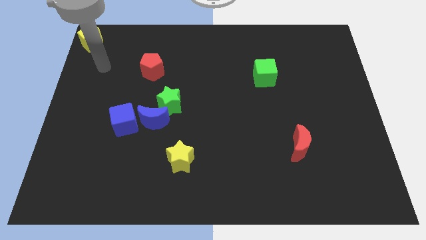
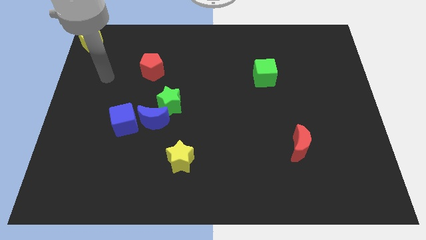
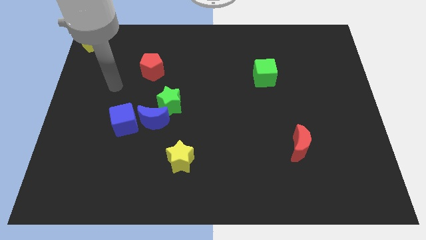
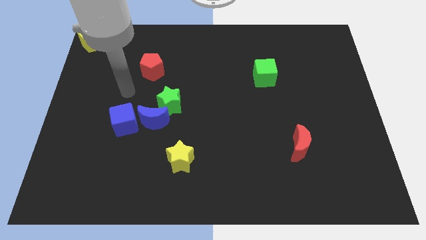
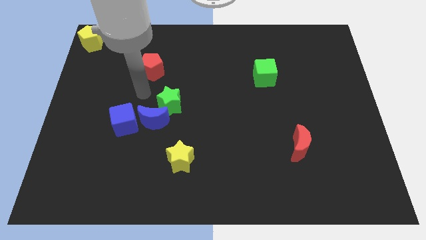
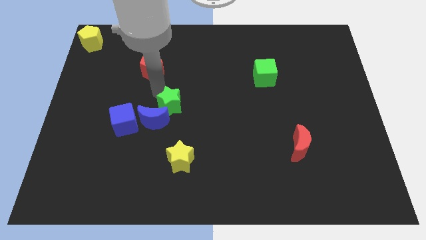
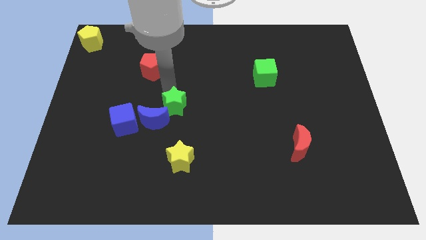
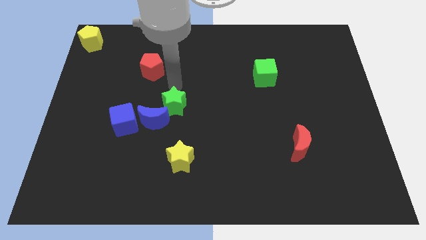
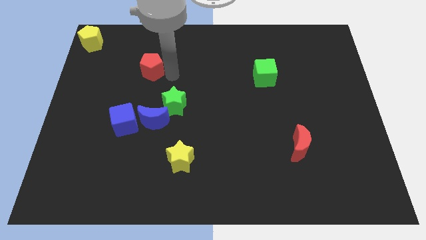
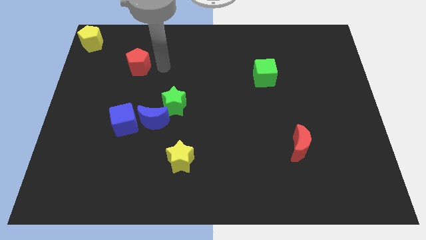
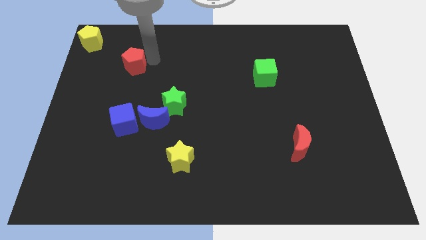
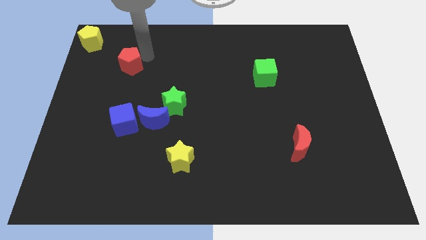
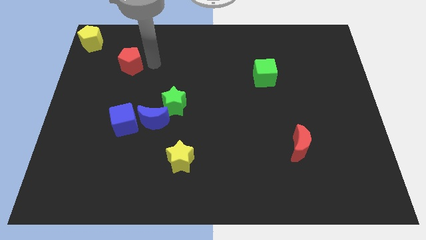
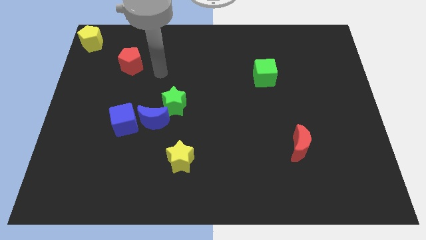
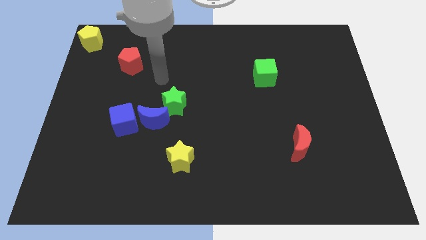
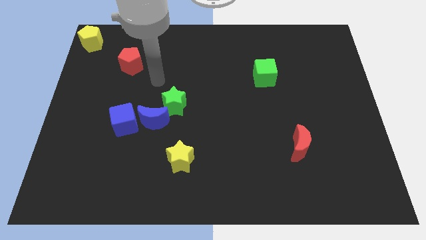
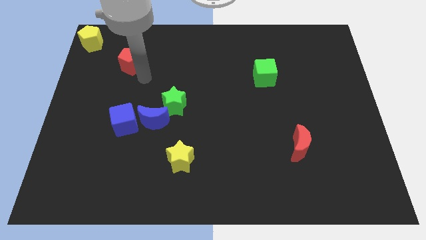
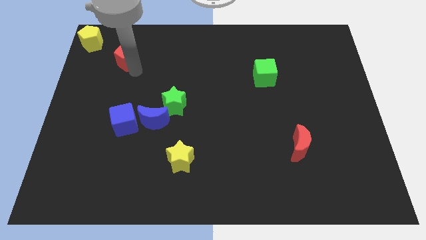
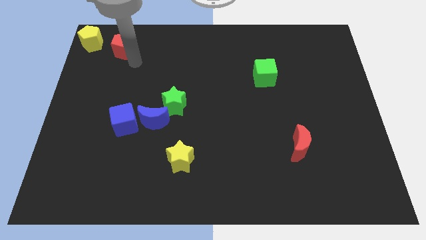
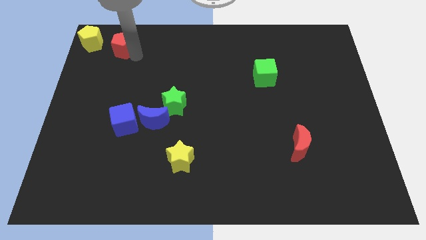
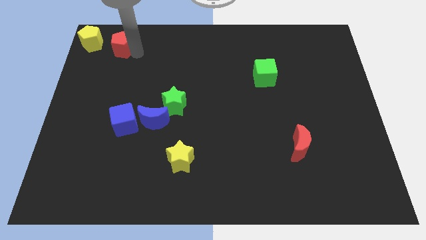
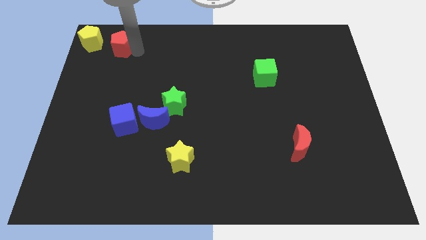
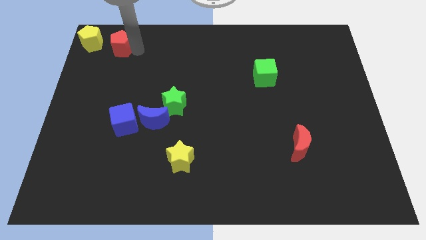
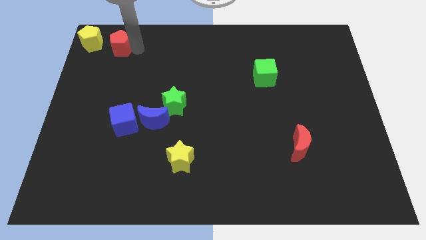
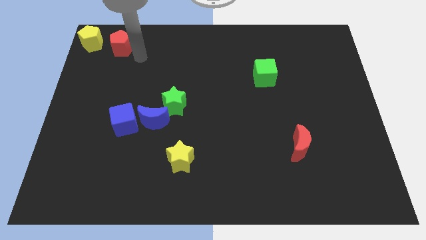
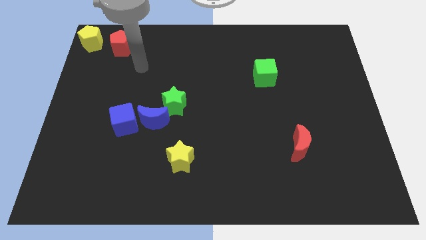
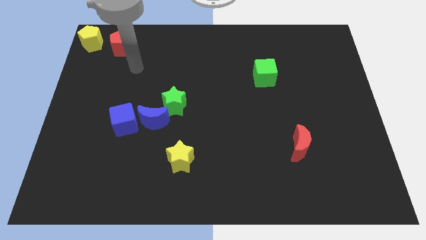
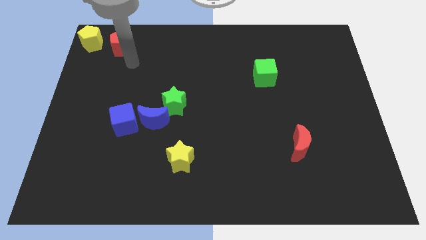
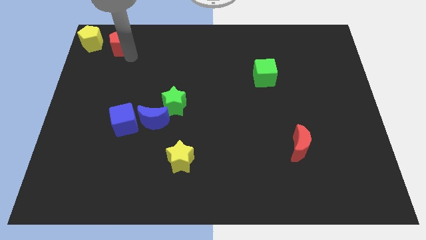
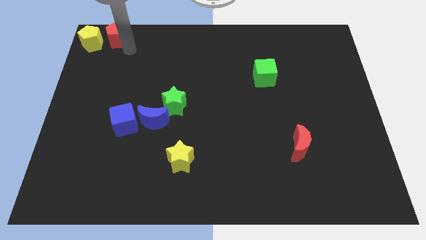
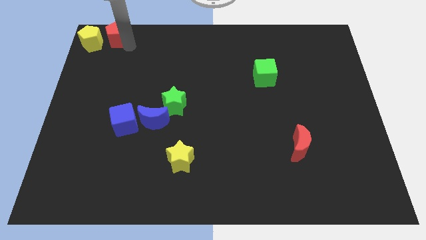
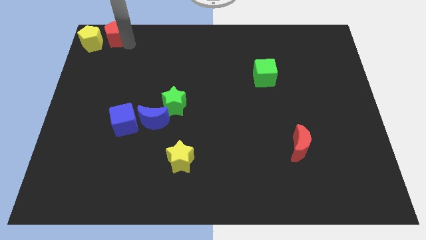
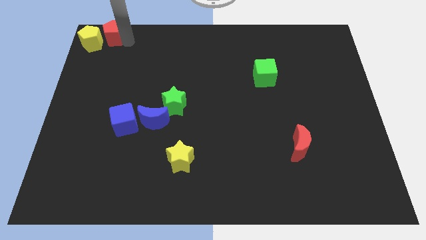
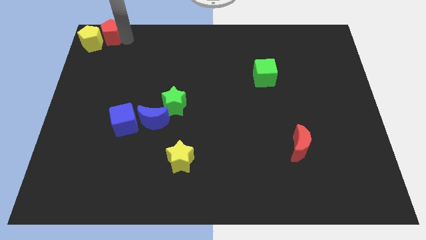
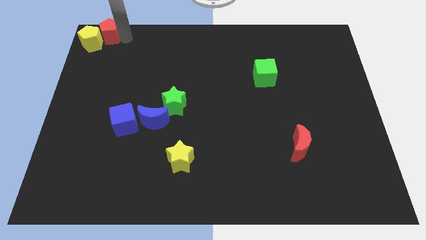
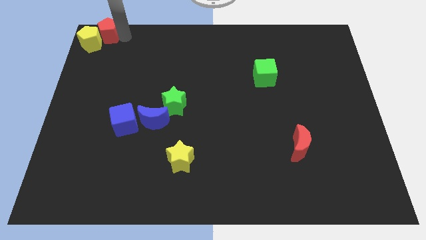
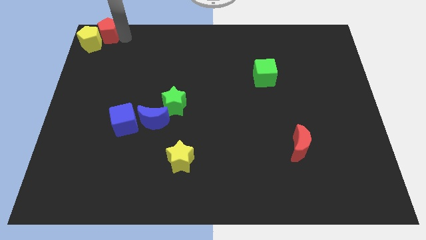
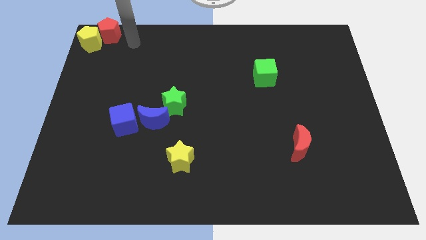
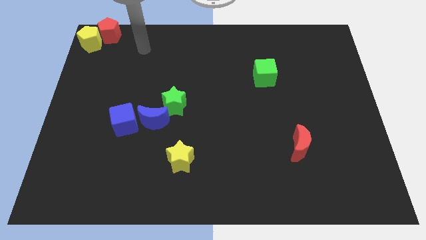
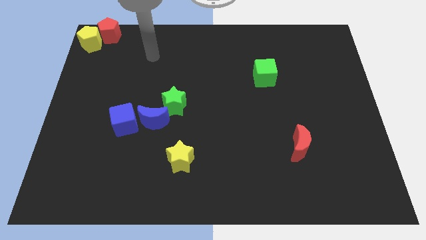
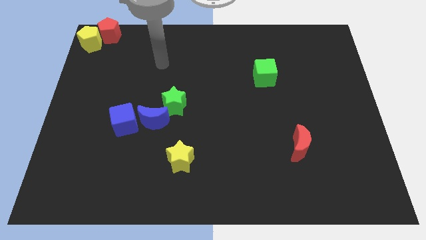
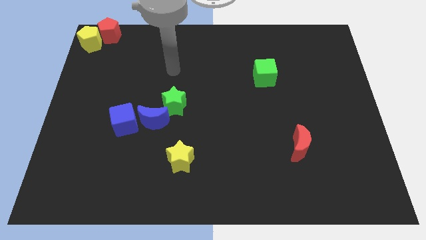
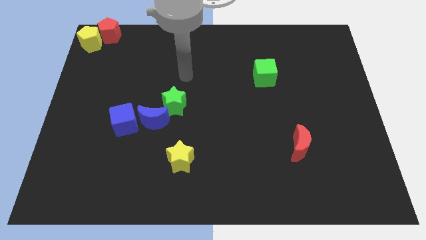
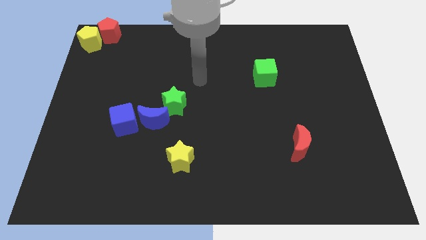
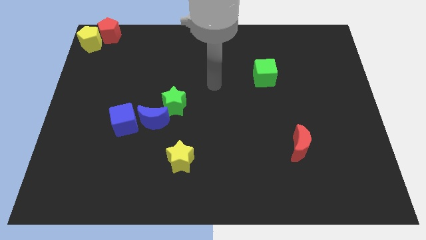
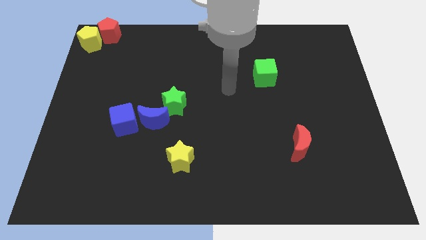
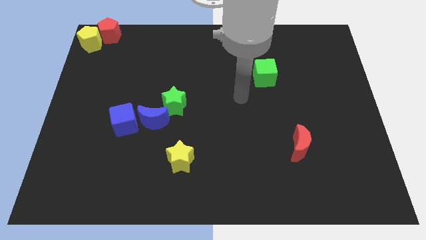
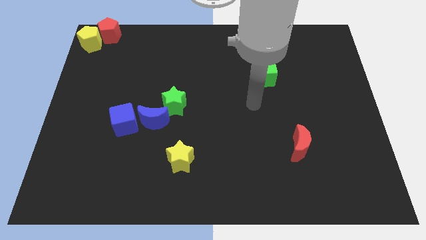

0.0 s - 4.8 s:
place red pentagon to the top left corner of the board

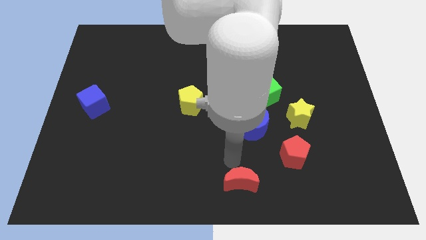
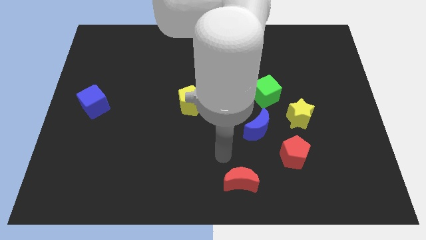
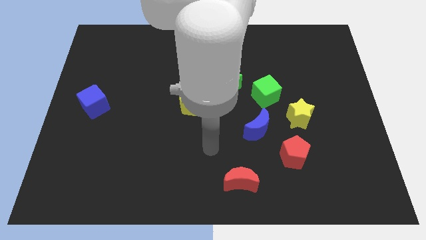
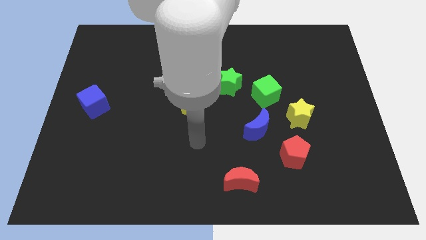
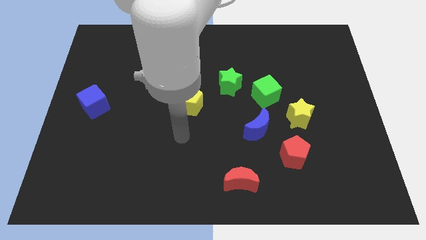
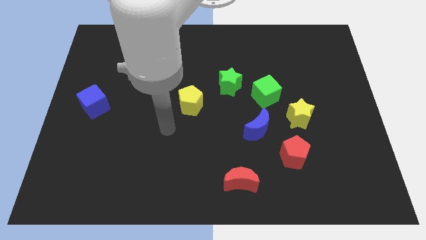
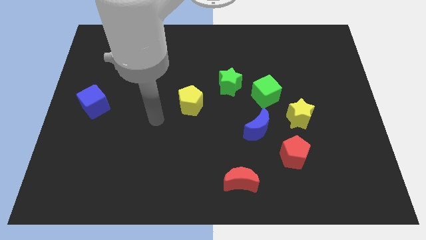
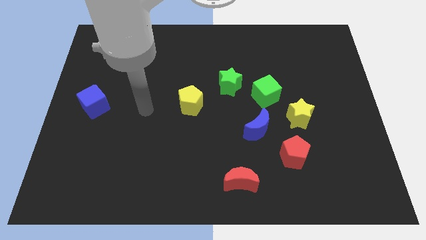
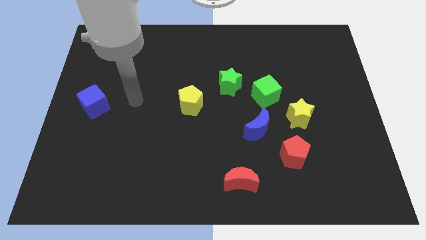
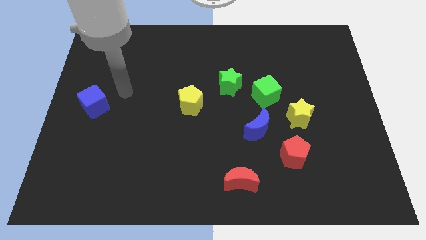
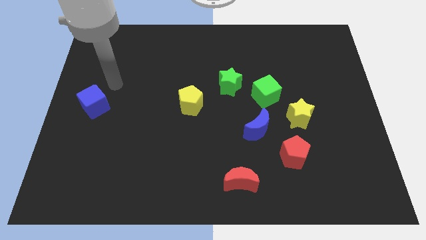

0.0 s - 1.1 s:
move the arm away from the red moon

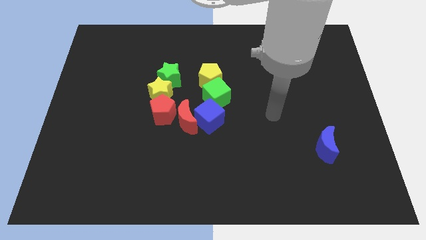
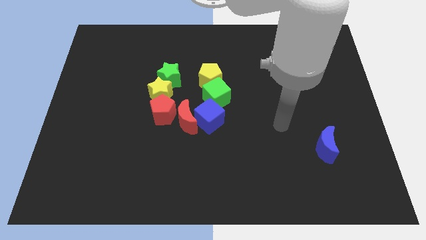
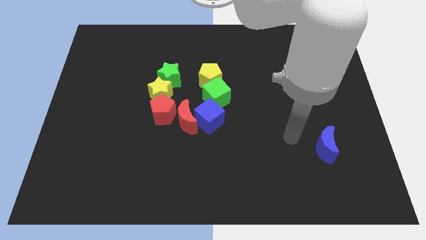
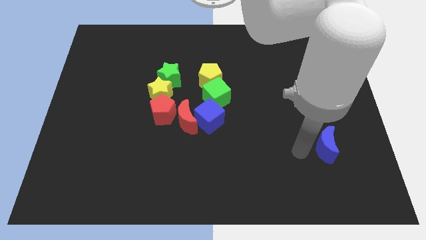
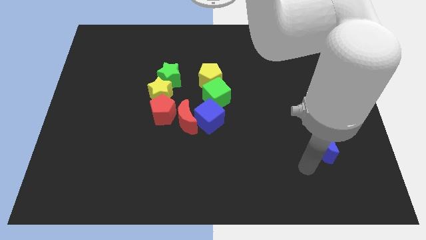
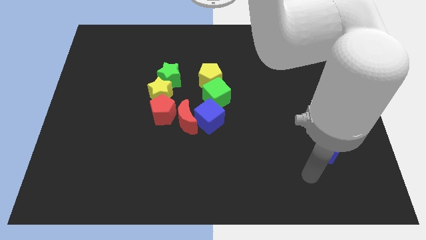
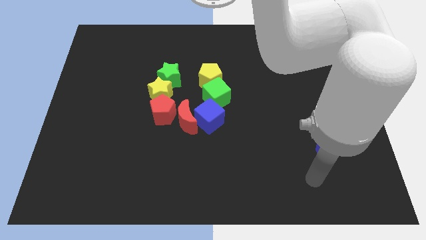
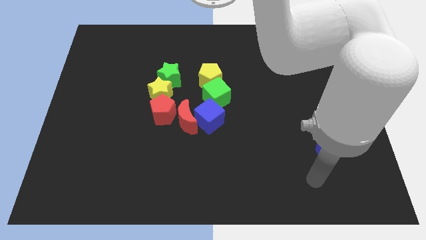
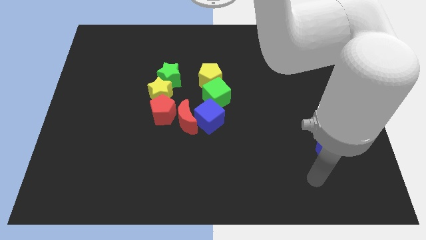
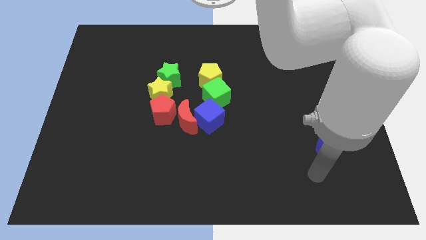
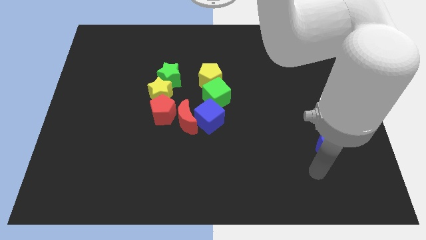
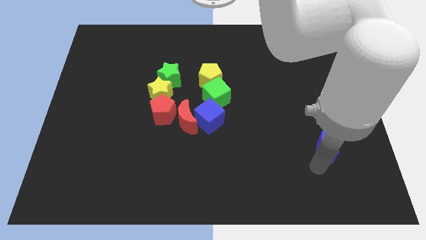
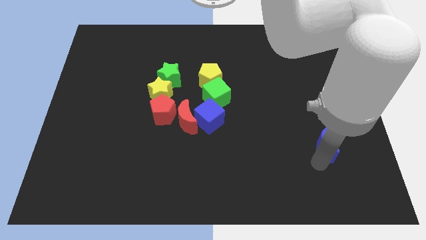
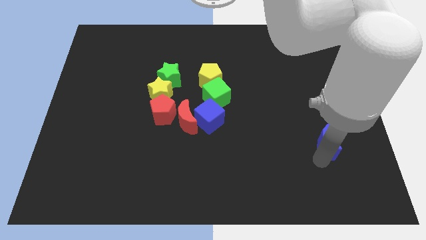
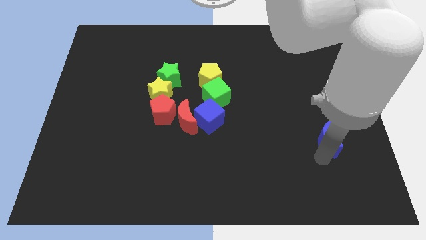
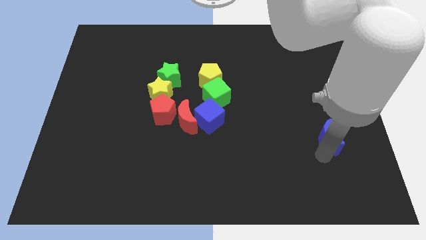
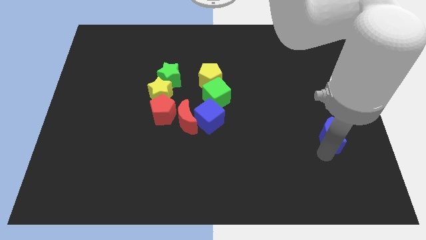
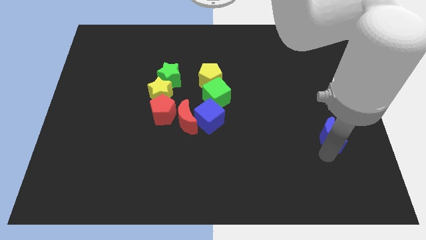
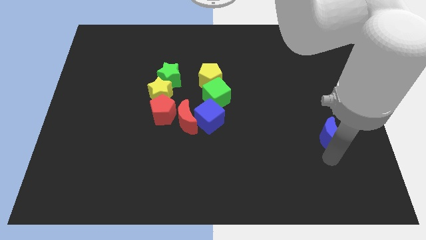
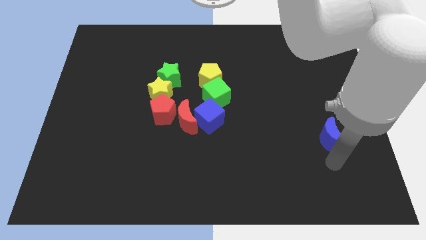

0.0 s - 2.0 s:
slide the blue crescent slightly upwards

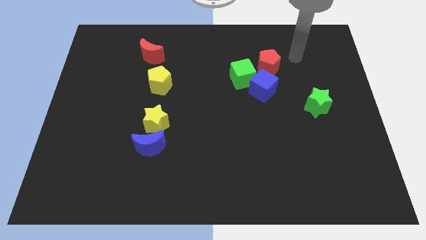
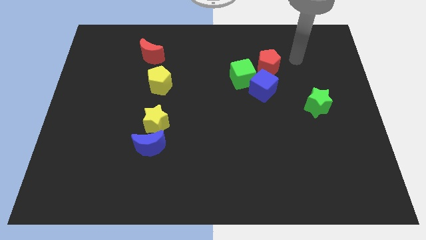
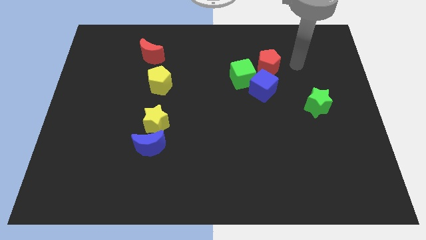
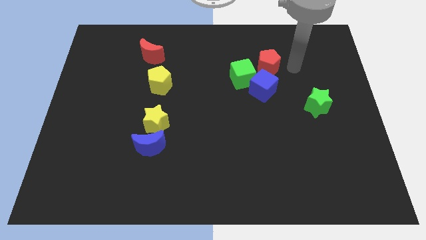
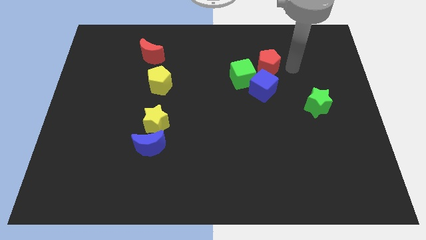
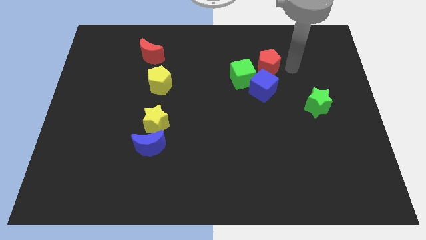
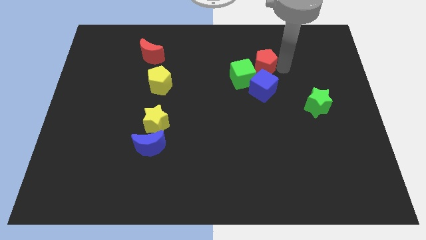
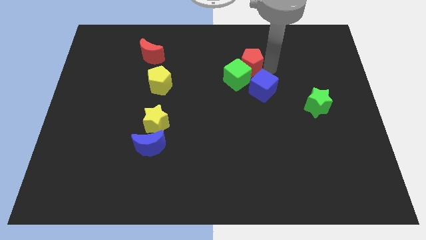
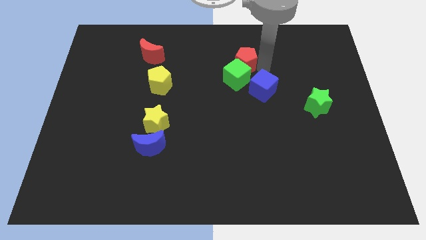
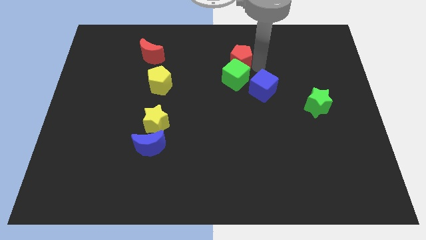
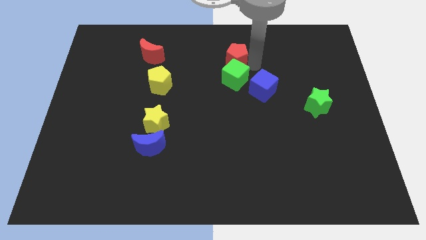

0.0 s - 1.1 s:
put the red pentagon at the top of the green cube
